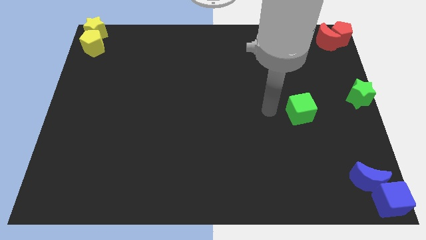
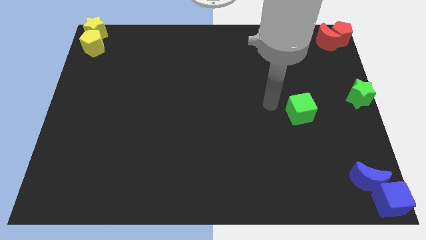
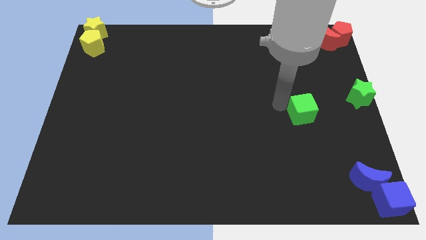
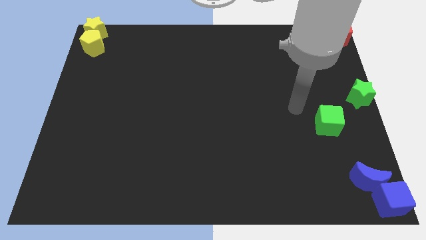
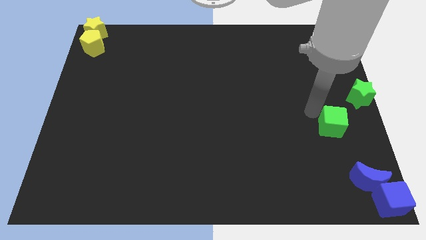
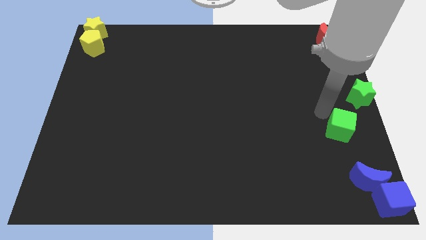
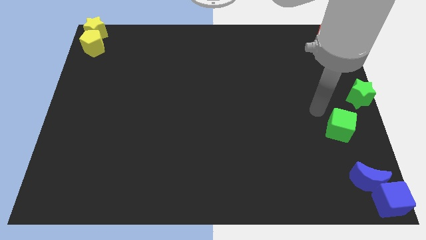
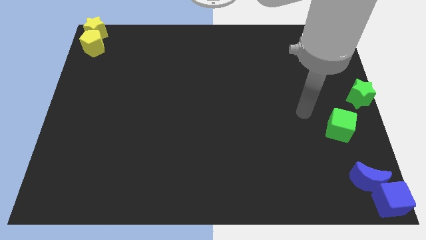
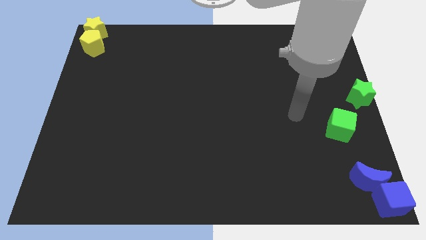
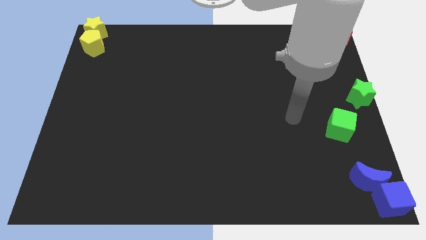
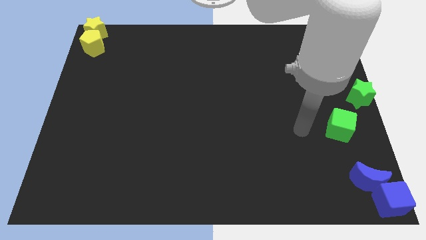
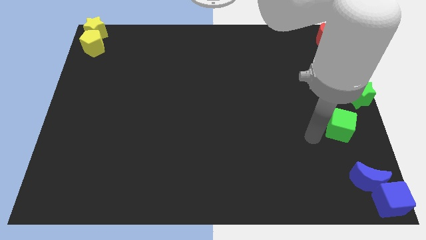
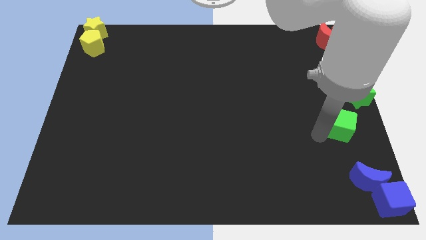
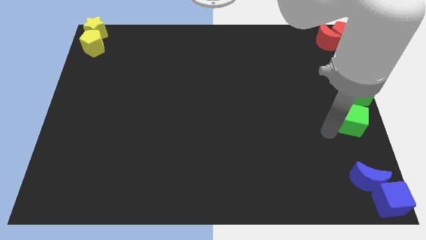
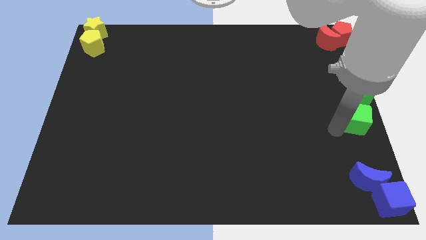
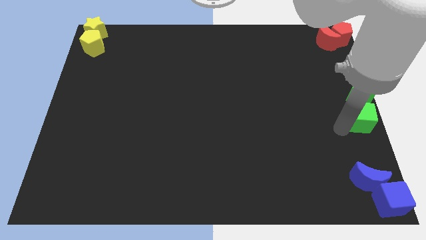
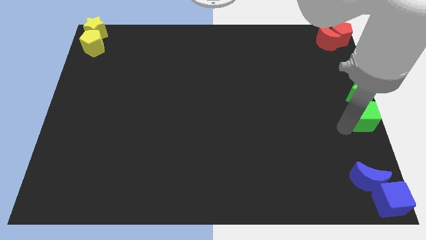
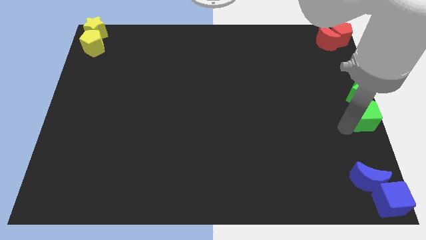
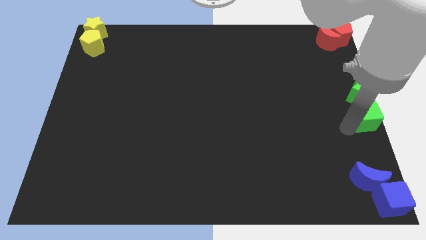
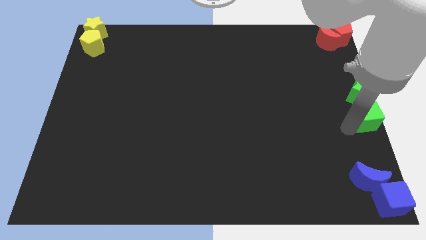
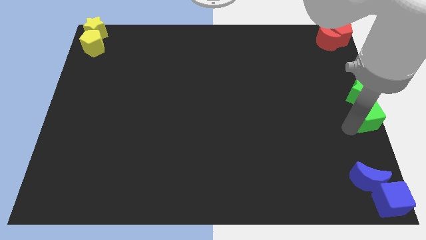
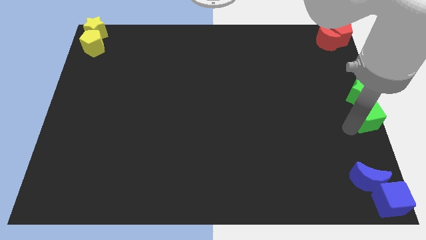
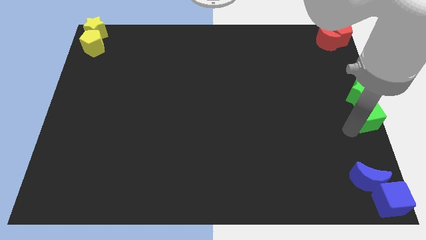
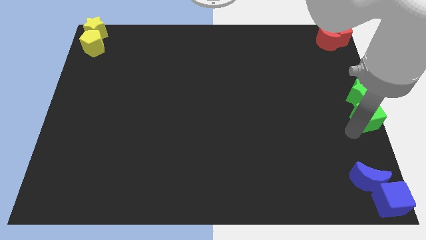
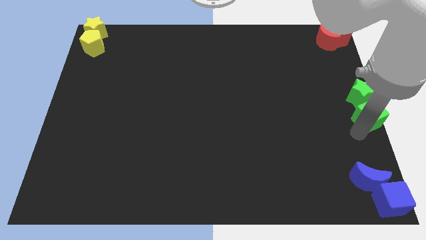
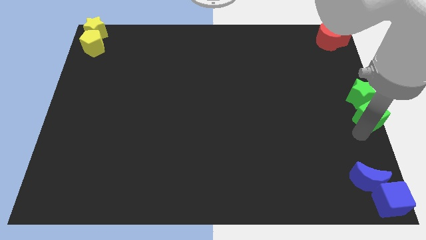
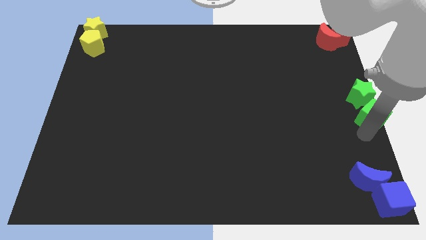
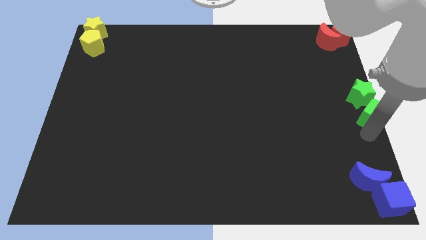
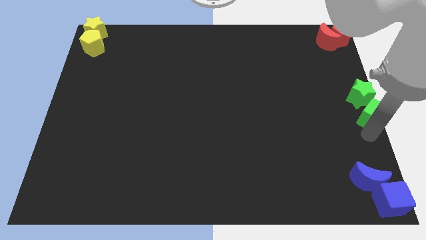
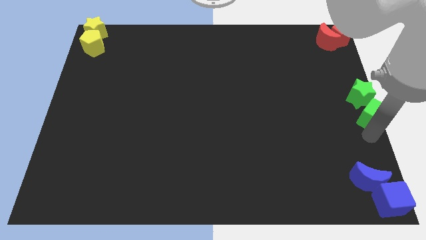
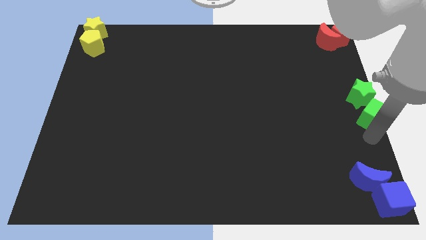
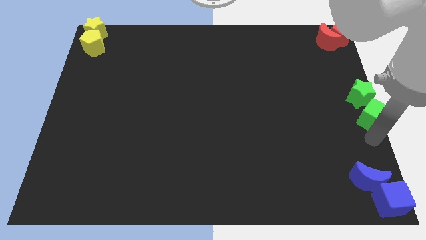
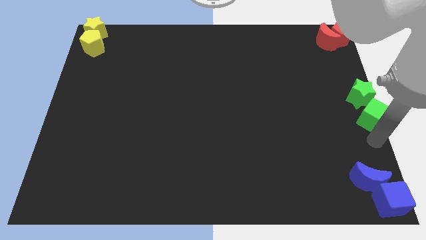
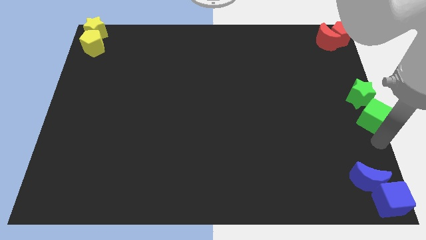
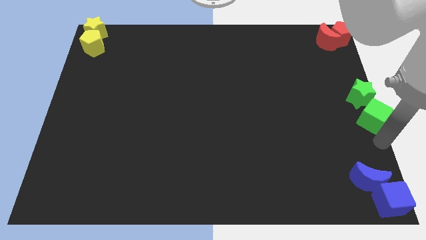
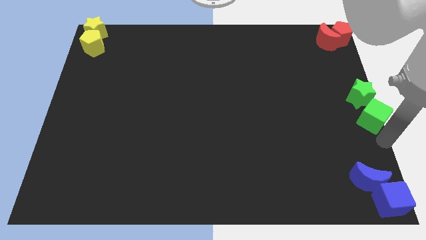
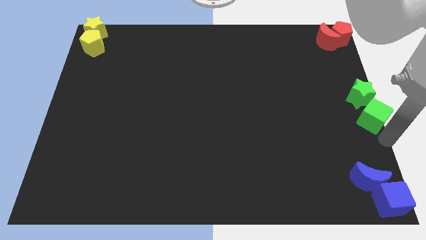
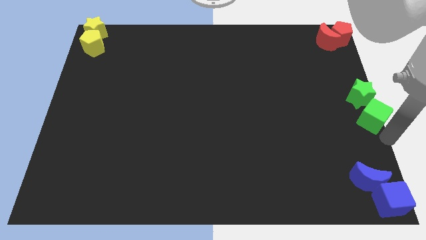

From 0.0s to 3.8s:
move the green cube to the right center of the board

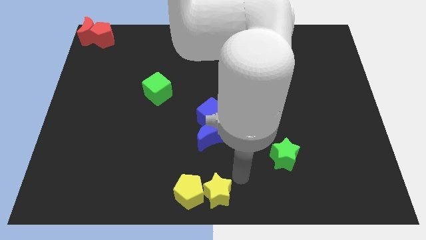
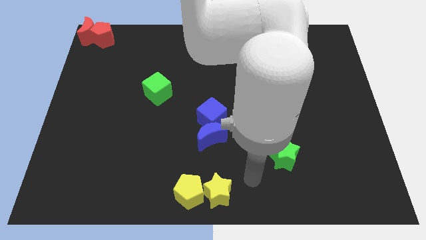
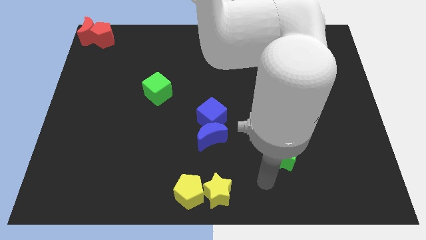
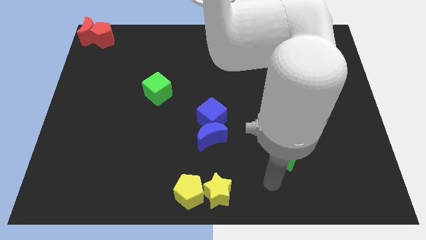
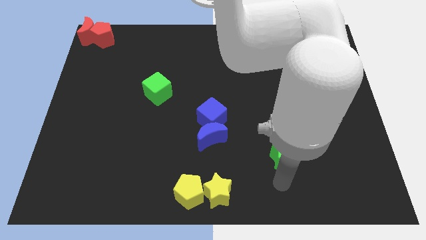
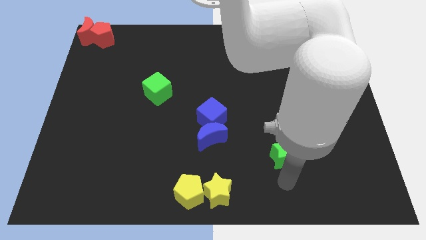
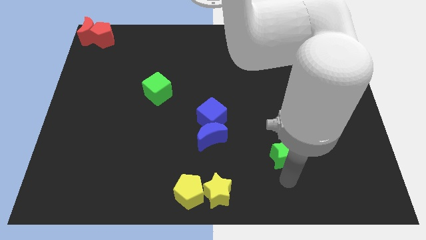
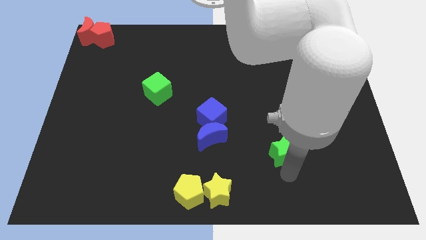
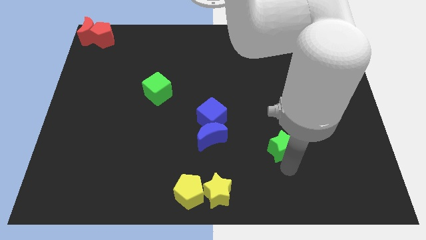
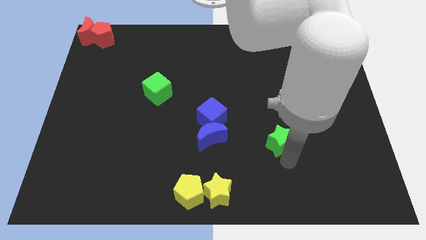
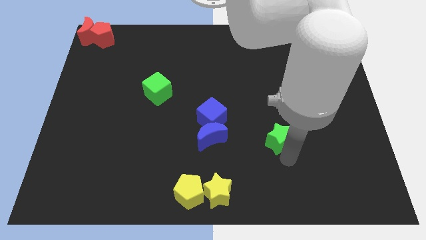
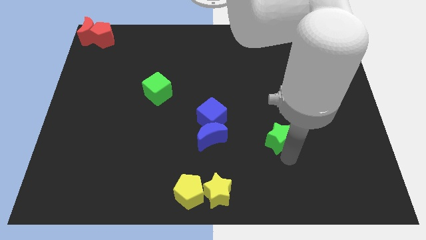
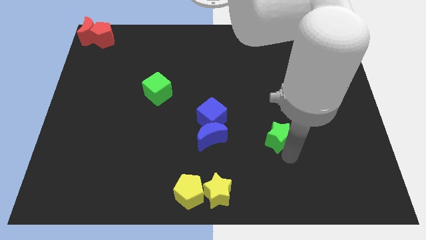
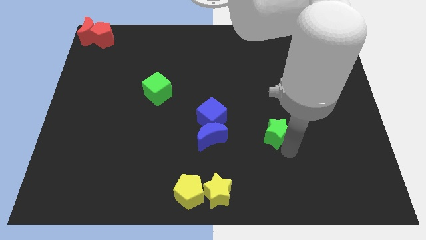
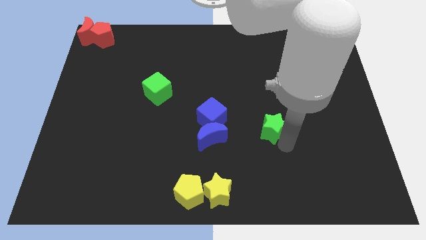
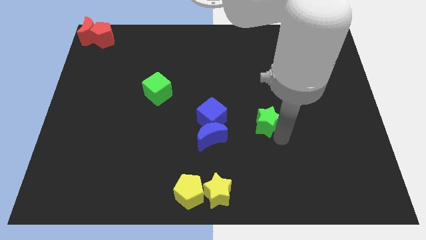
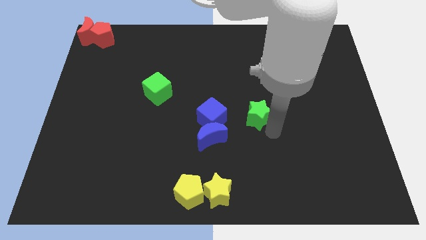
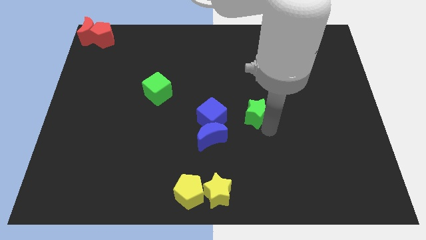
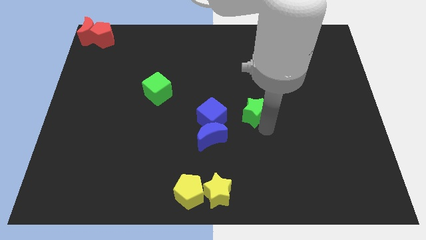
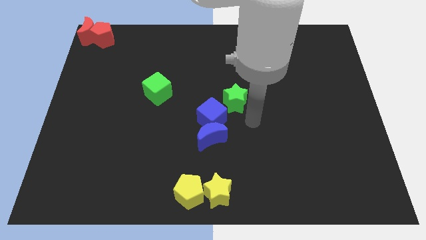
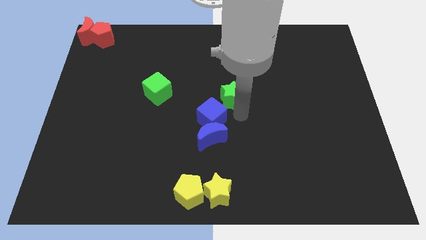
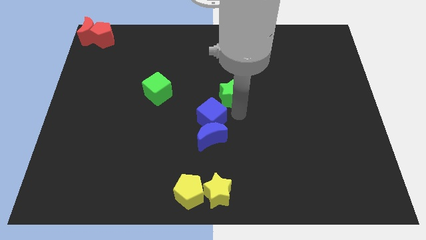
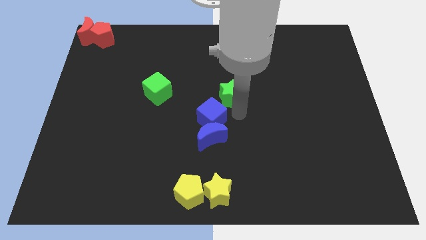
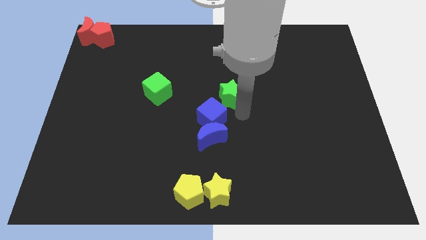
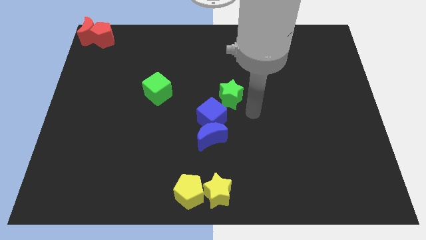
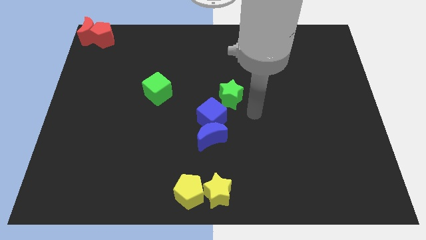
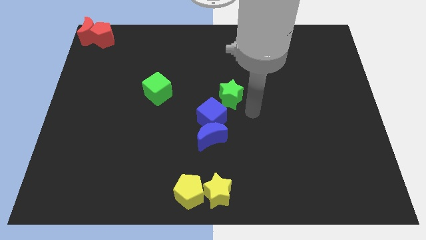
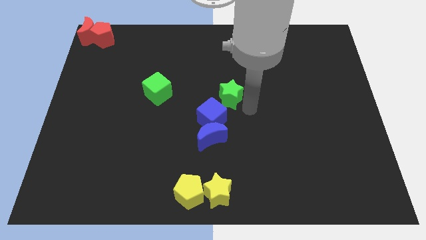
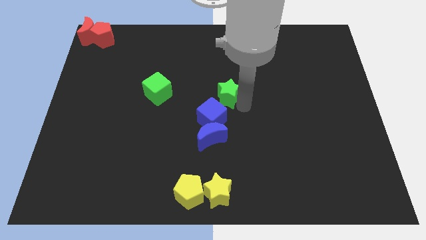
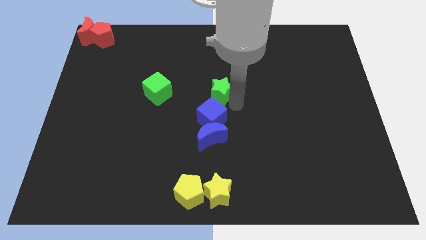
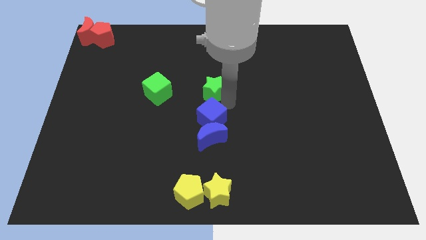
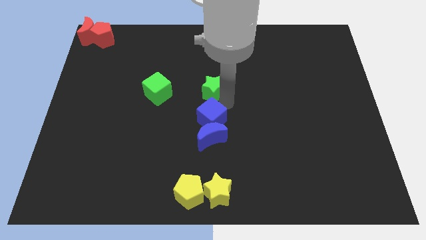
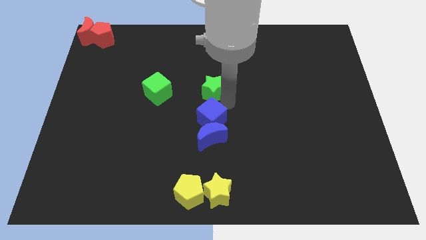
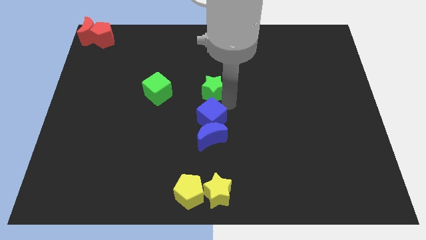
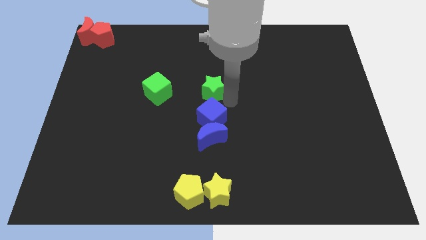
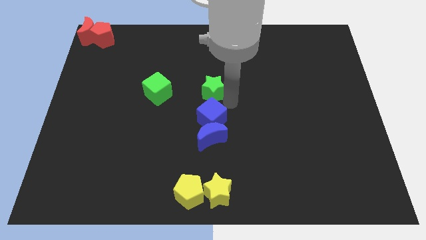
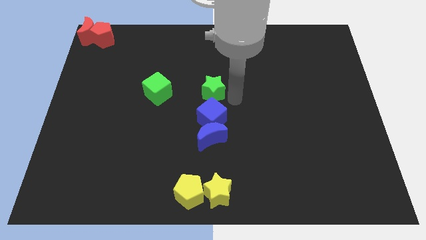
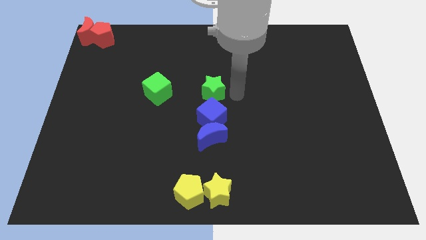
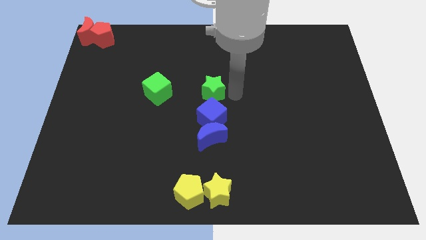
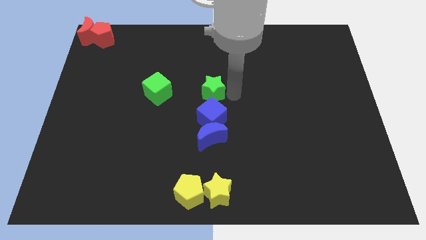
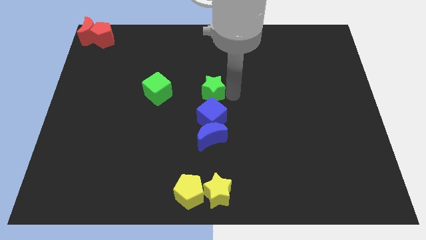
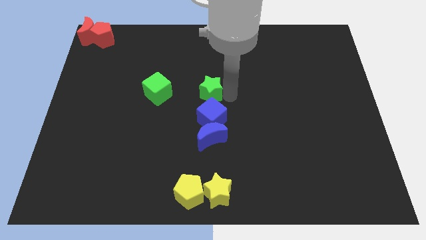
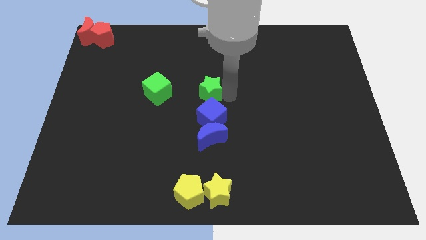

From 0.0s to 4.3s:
place green star above blue cube

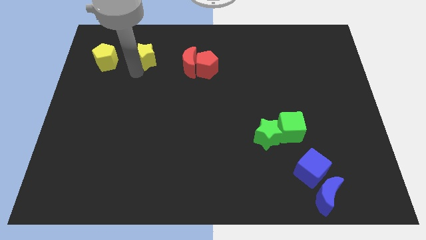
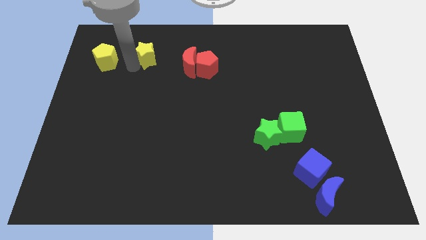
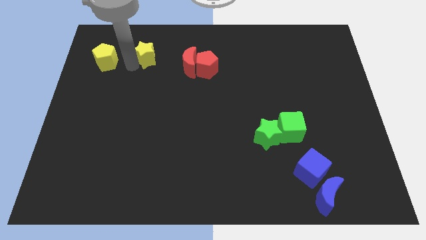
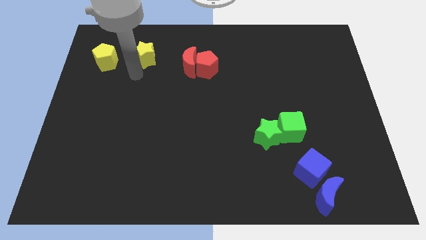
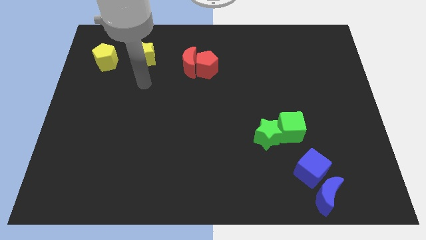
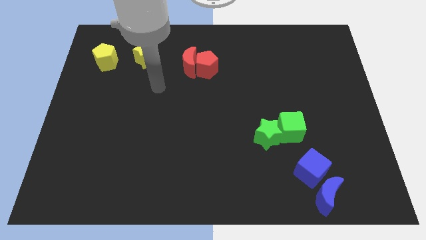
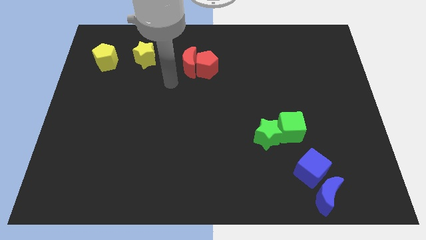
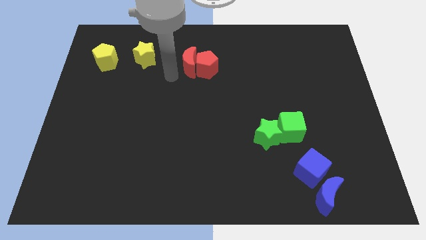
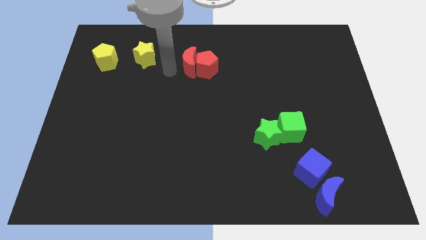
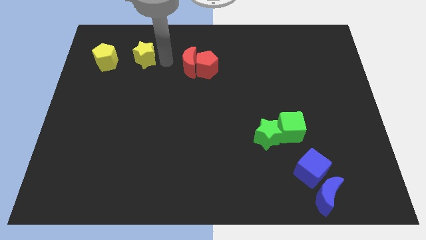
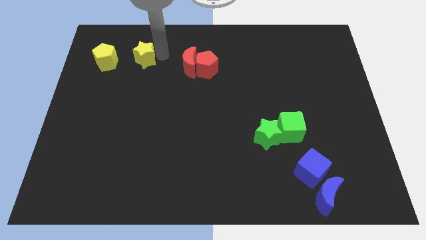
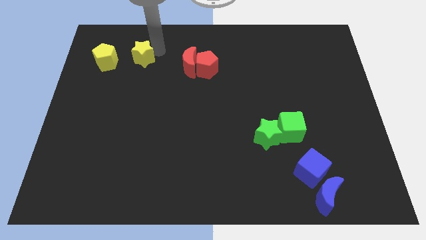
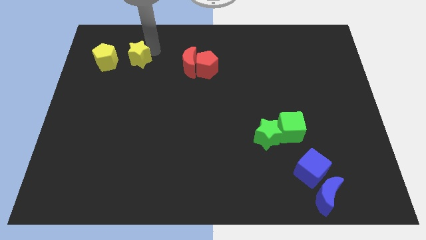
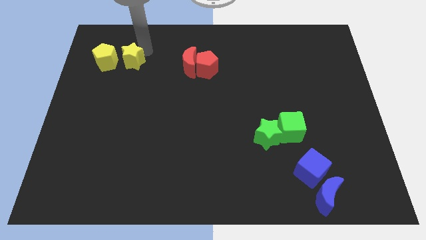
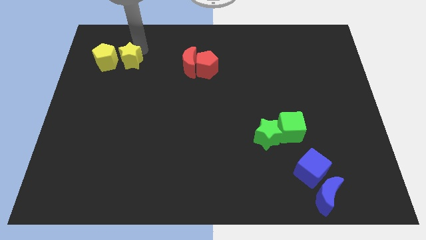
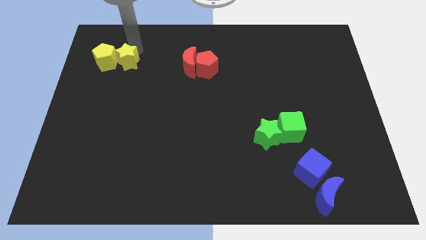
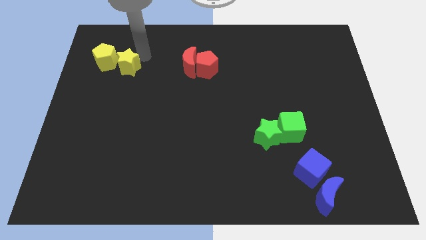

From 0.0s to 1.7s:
push the yellow star into the yellow pentagon
